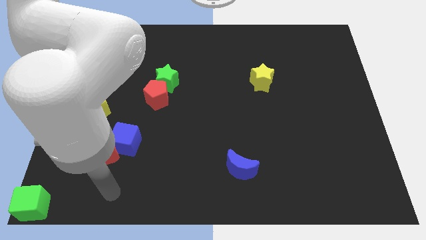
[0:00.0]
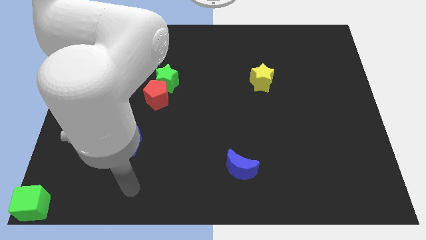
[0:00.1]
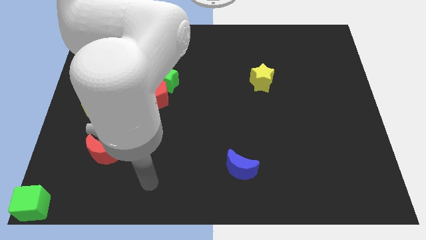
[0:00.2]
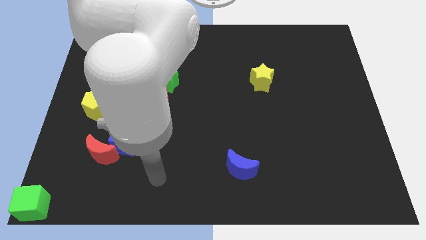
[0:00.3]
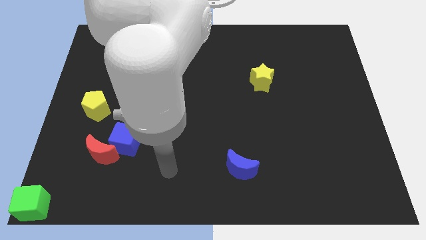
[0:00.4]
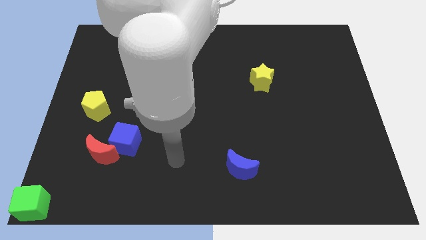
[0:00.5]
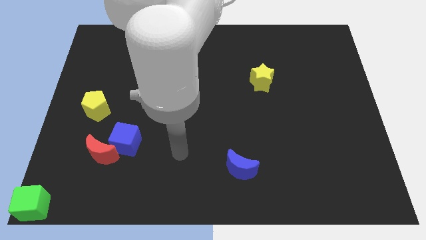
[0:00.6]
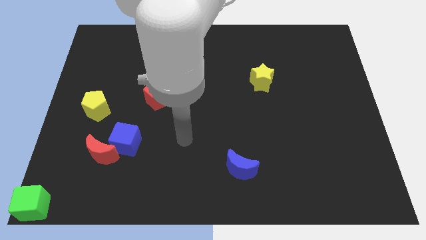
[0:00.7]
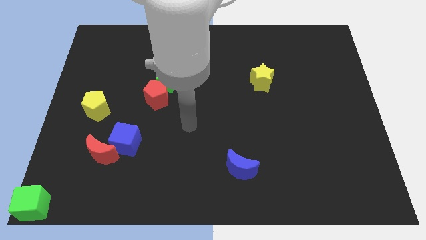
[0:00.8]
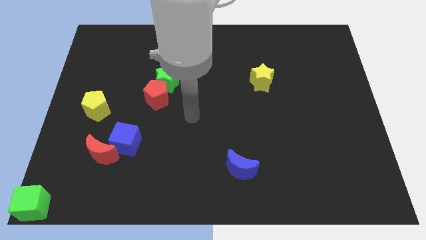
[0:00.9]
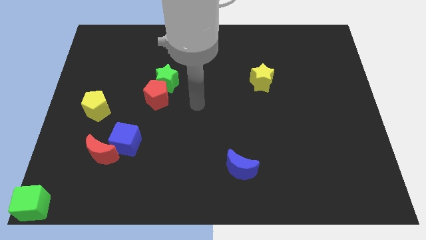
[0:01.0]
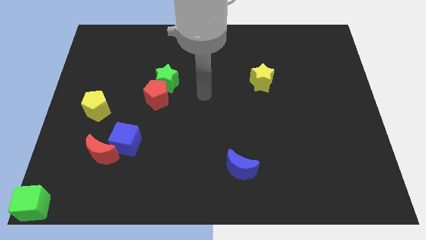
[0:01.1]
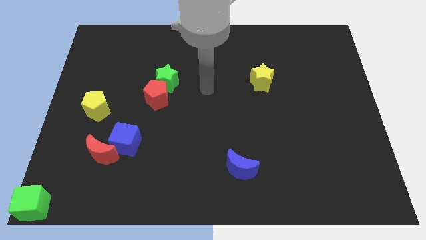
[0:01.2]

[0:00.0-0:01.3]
move the arm to the center of the board

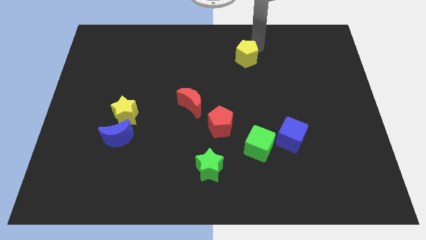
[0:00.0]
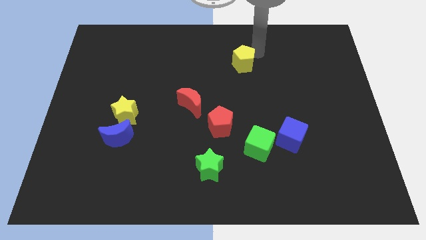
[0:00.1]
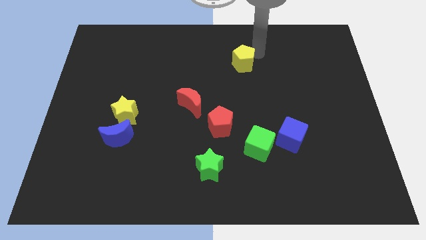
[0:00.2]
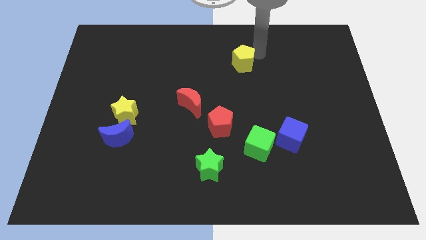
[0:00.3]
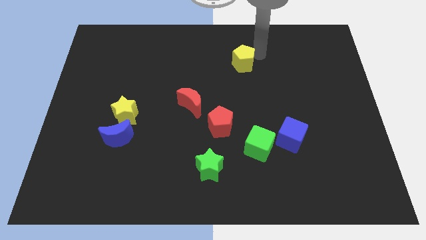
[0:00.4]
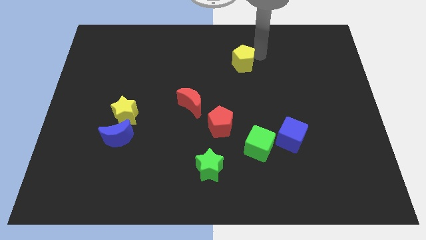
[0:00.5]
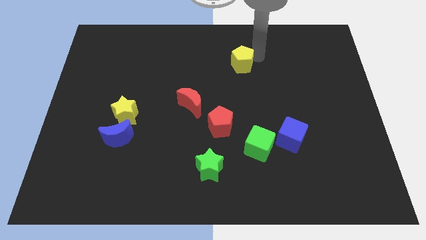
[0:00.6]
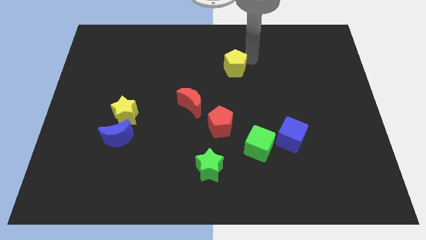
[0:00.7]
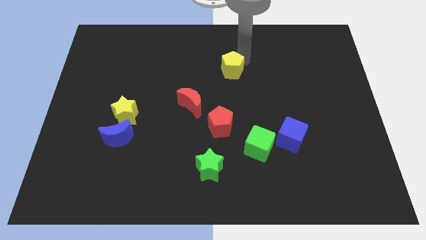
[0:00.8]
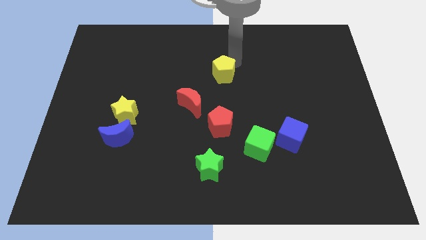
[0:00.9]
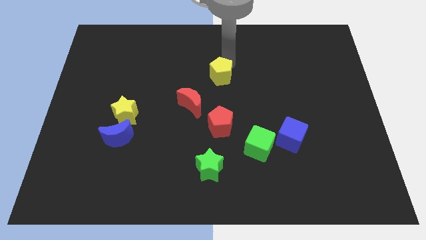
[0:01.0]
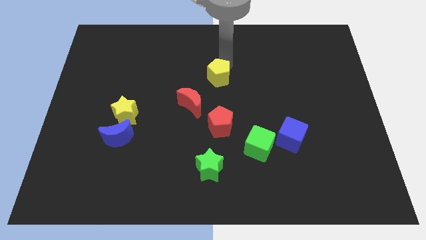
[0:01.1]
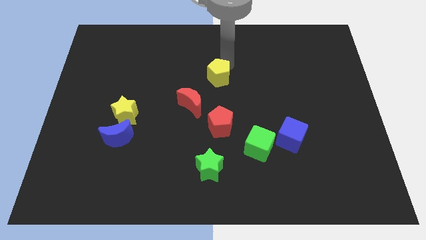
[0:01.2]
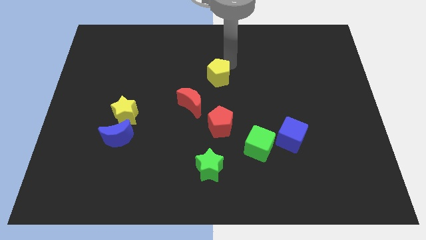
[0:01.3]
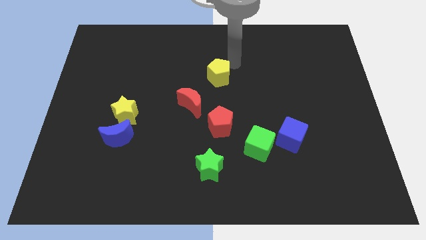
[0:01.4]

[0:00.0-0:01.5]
move the yellow pentagon parallel to the red crescent

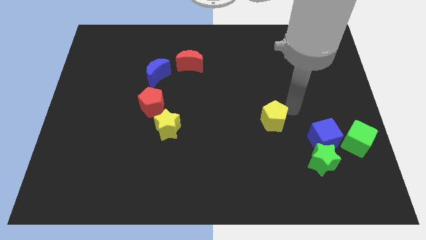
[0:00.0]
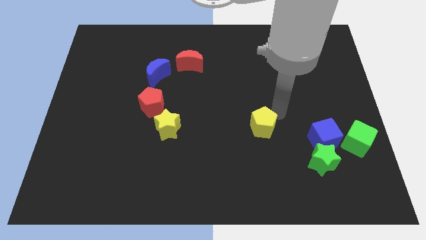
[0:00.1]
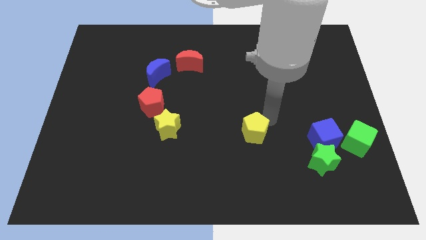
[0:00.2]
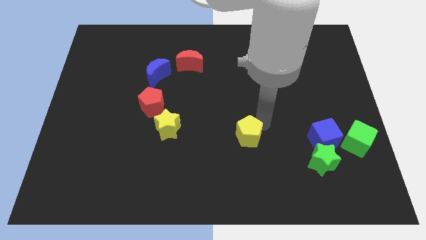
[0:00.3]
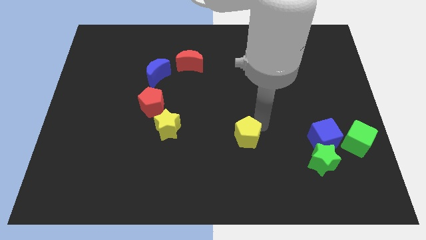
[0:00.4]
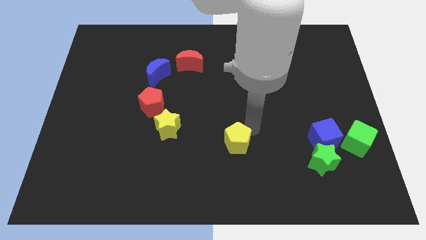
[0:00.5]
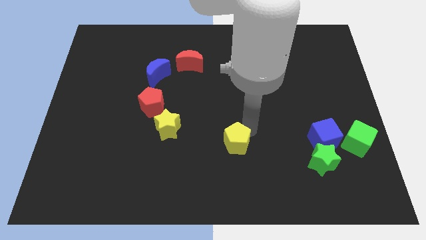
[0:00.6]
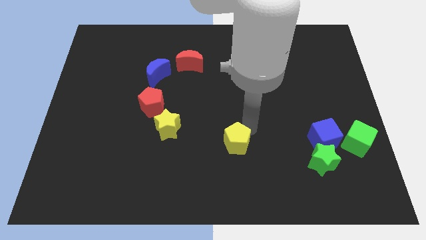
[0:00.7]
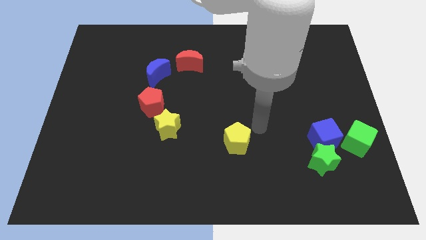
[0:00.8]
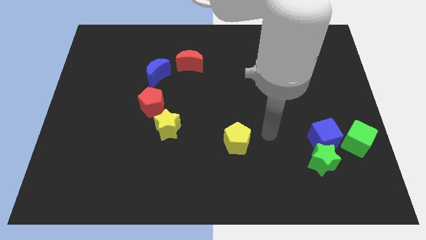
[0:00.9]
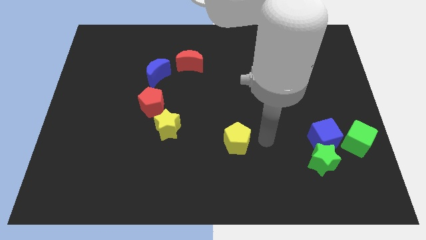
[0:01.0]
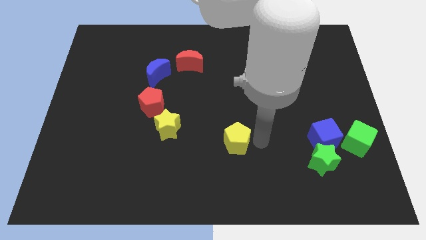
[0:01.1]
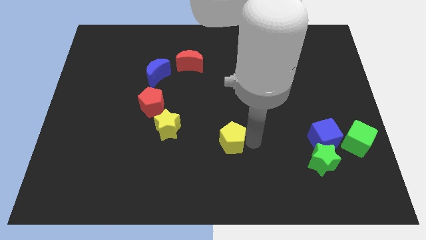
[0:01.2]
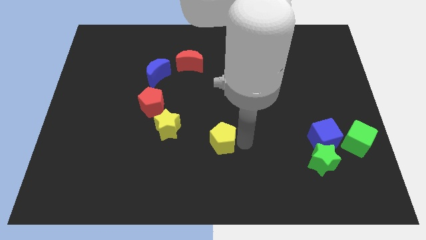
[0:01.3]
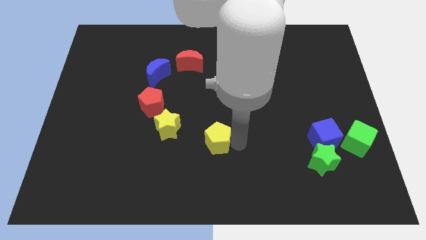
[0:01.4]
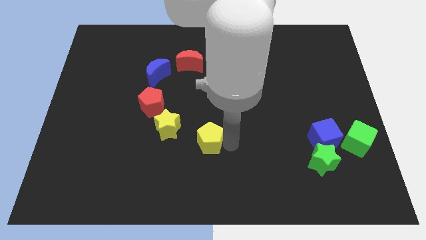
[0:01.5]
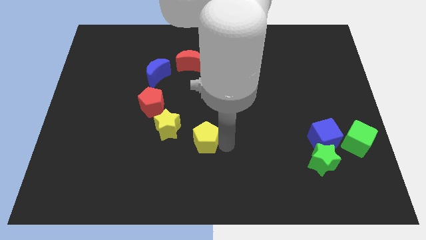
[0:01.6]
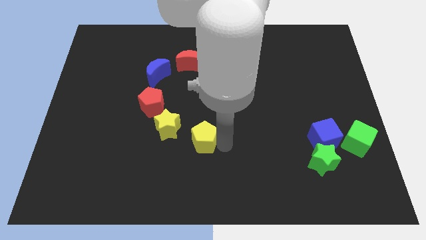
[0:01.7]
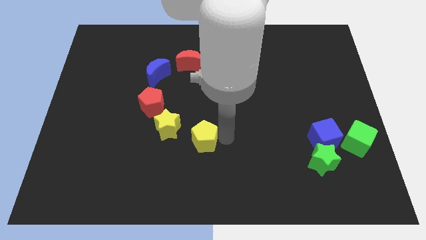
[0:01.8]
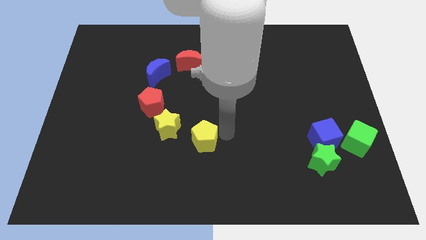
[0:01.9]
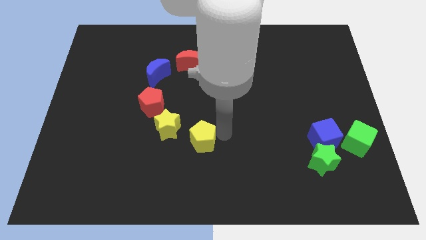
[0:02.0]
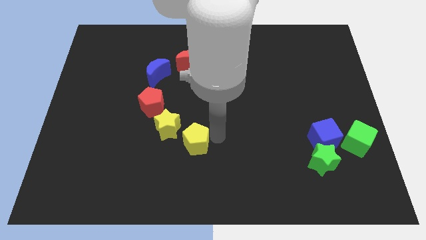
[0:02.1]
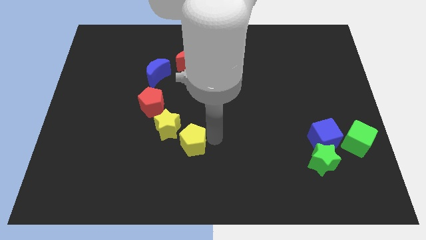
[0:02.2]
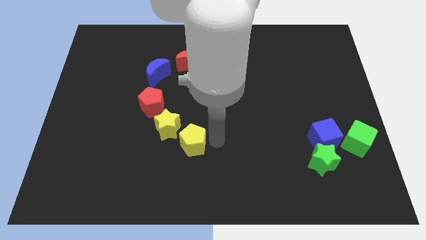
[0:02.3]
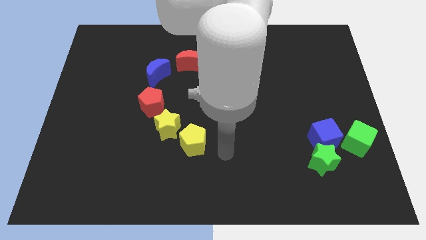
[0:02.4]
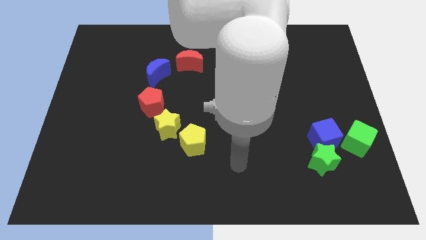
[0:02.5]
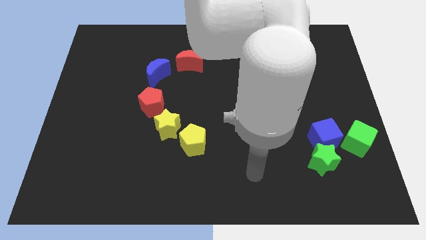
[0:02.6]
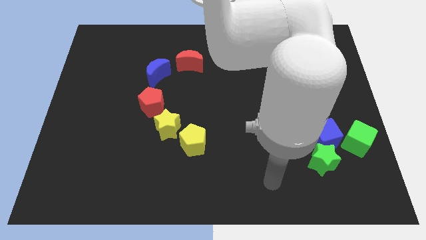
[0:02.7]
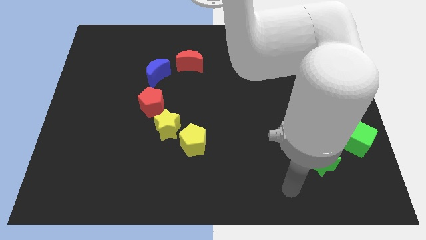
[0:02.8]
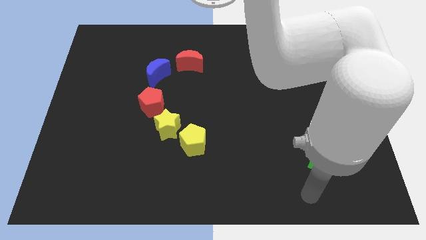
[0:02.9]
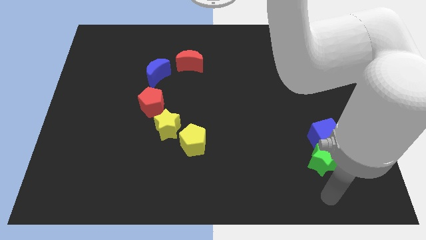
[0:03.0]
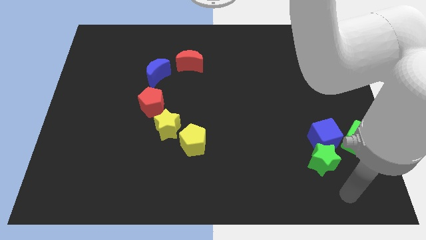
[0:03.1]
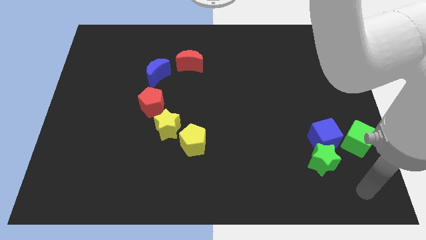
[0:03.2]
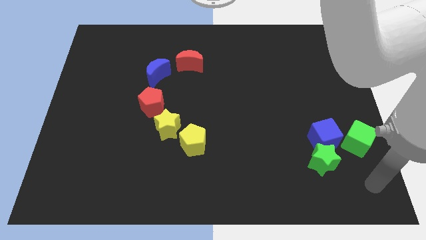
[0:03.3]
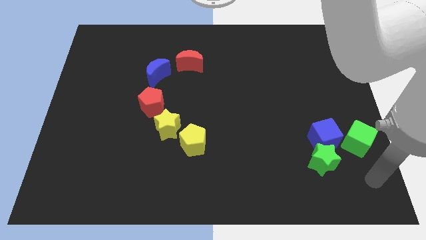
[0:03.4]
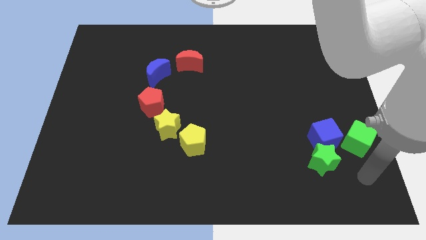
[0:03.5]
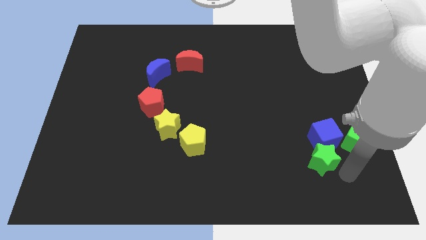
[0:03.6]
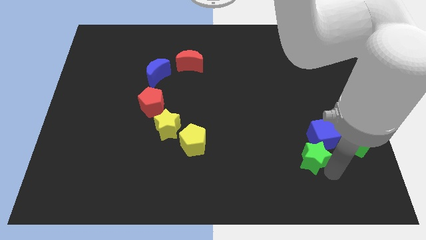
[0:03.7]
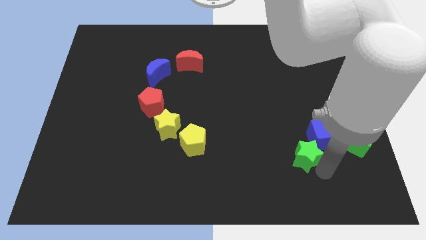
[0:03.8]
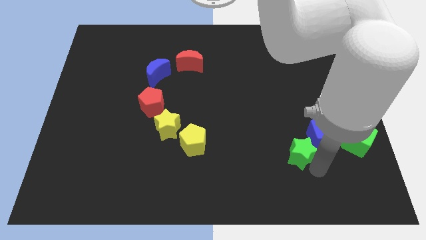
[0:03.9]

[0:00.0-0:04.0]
push the yellow pentagon to the right of the yellow star

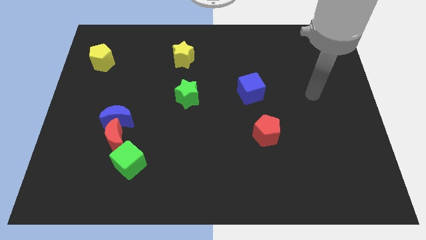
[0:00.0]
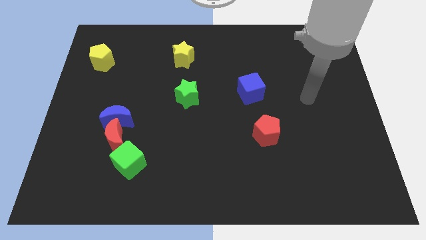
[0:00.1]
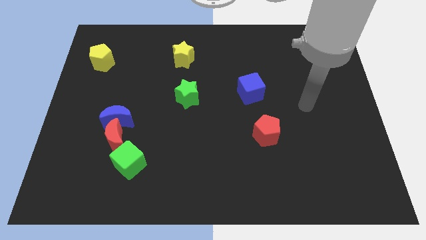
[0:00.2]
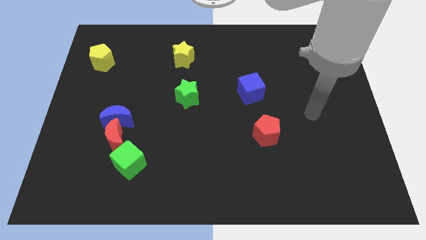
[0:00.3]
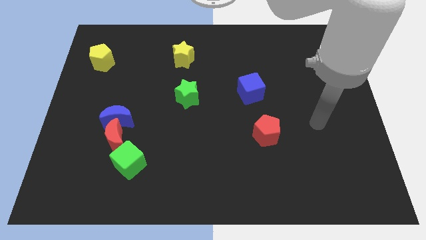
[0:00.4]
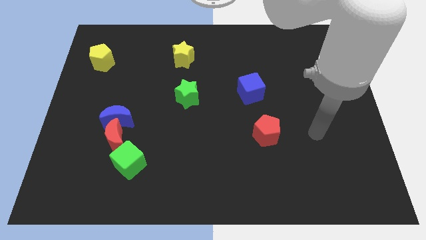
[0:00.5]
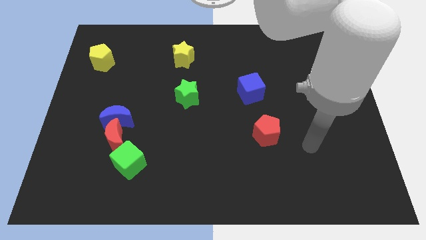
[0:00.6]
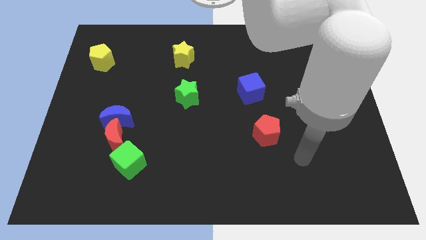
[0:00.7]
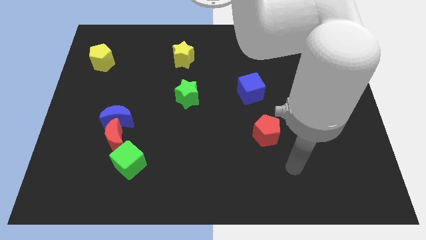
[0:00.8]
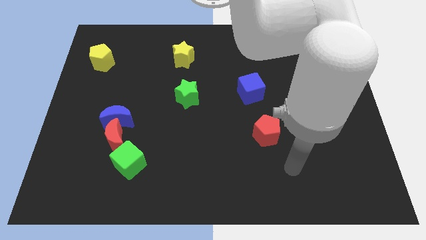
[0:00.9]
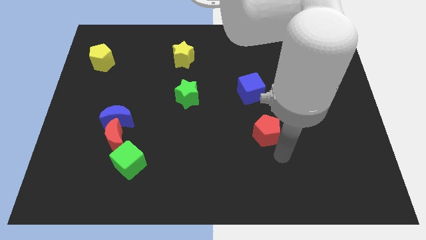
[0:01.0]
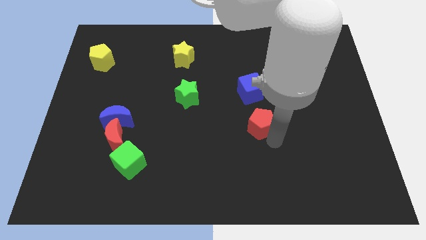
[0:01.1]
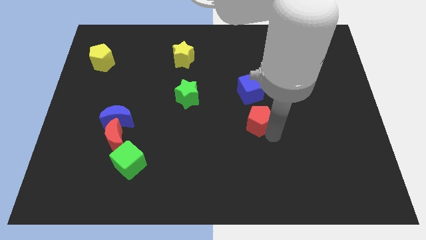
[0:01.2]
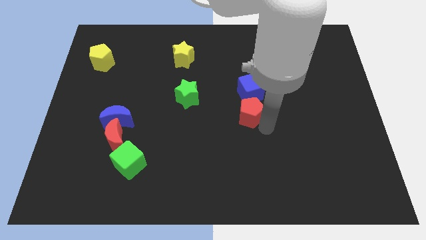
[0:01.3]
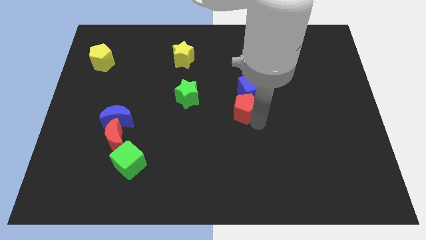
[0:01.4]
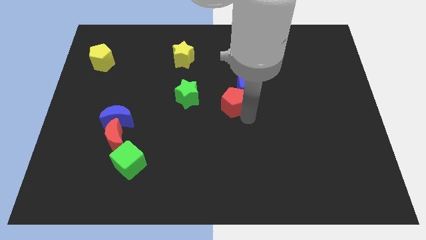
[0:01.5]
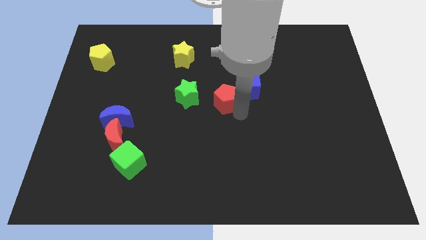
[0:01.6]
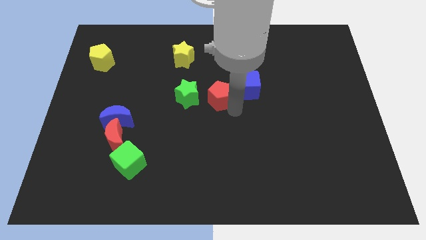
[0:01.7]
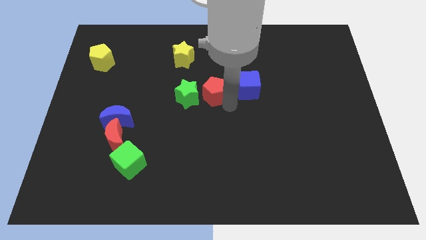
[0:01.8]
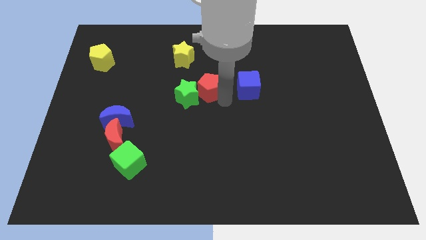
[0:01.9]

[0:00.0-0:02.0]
slide the red pentagon between the green star and blue cube

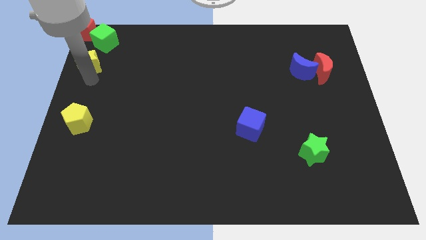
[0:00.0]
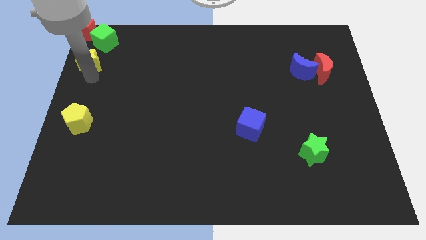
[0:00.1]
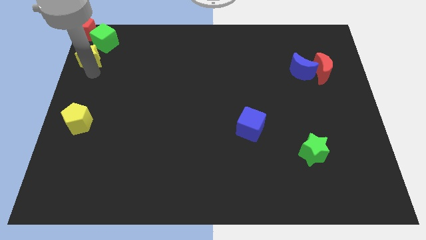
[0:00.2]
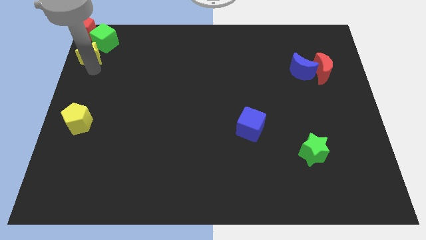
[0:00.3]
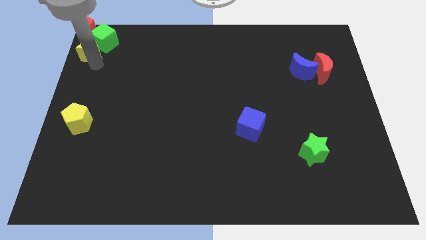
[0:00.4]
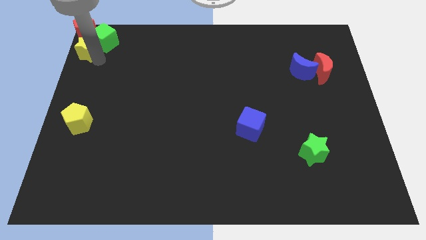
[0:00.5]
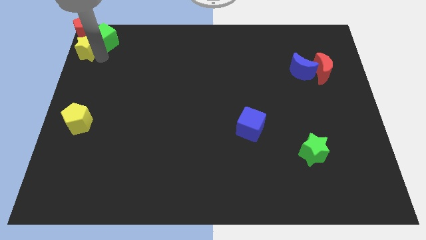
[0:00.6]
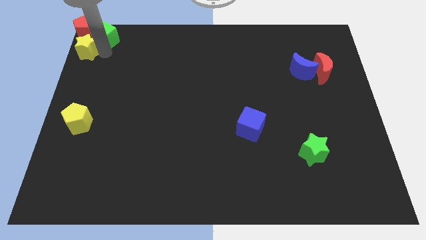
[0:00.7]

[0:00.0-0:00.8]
attach the yellow star to the green cube
